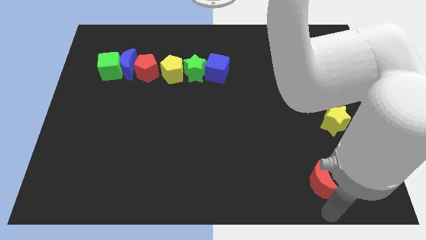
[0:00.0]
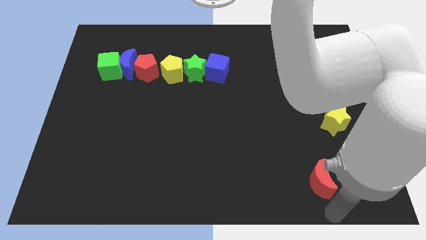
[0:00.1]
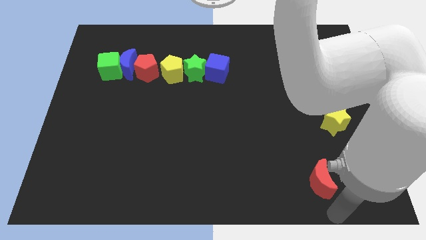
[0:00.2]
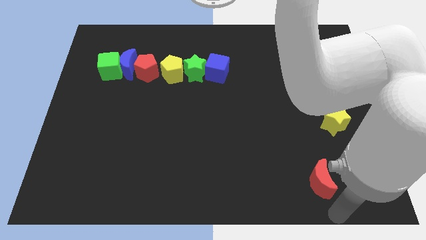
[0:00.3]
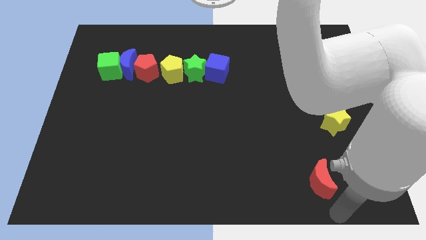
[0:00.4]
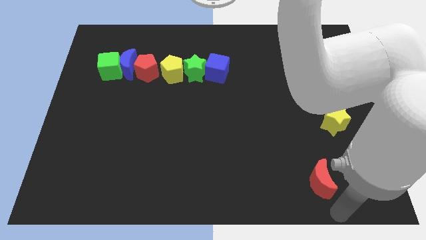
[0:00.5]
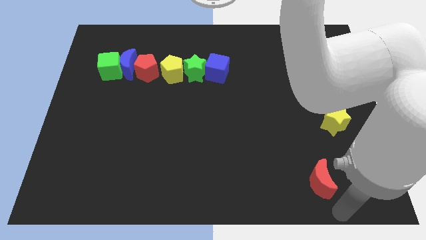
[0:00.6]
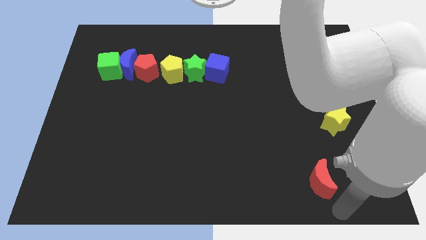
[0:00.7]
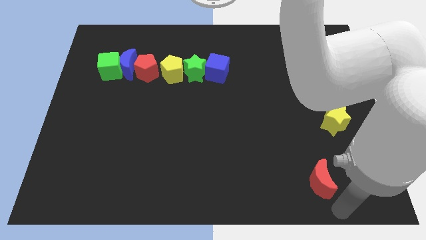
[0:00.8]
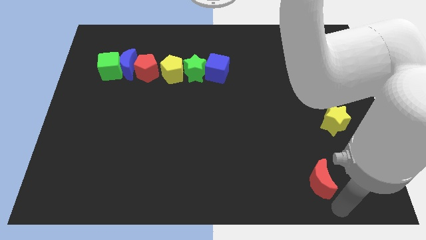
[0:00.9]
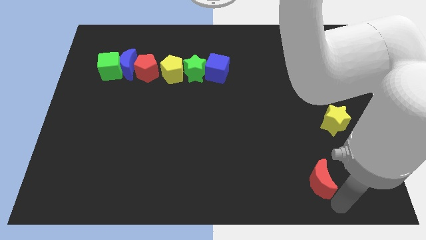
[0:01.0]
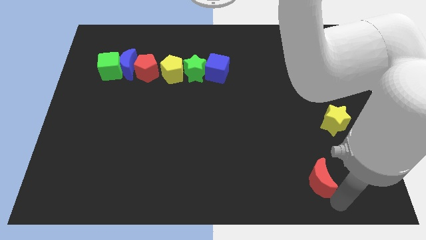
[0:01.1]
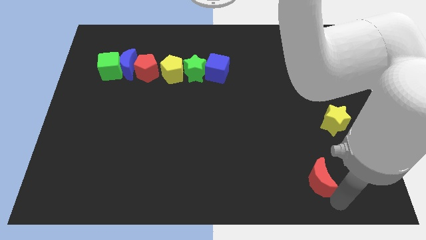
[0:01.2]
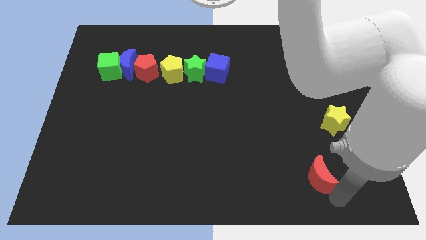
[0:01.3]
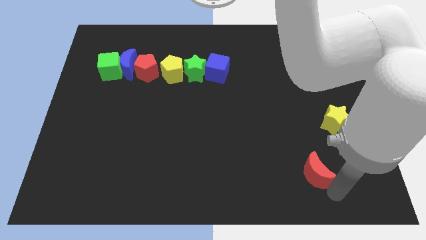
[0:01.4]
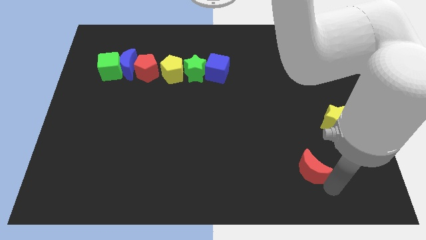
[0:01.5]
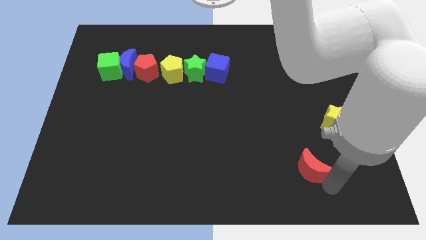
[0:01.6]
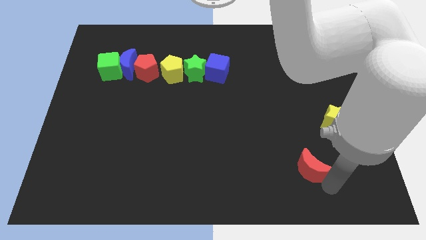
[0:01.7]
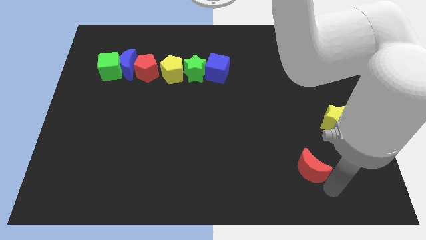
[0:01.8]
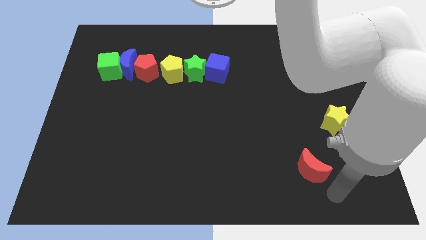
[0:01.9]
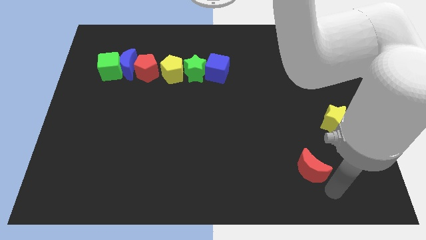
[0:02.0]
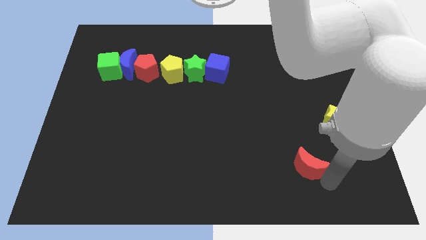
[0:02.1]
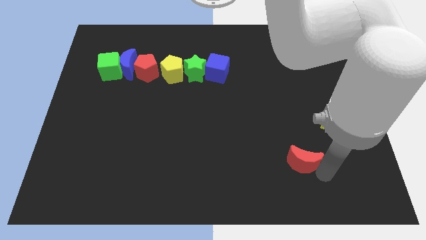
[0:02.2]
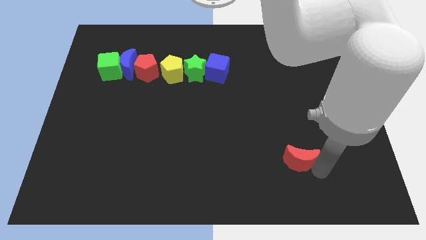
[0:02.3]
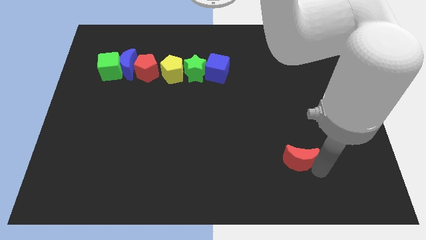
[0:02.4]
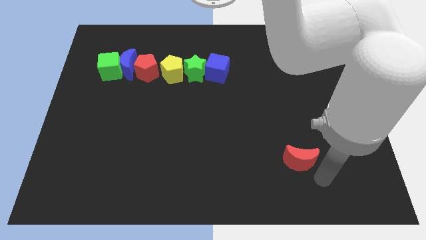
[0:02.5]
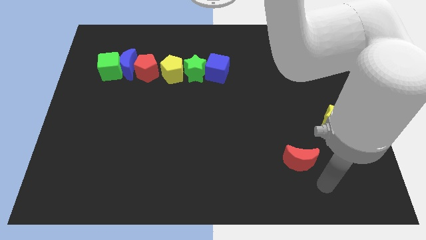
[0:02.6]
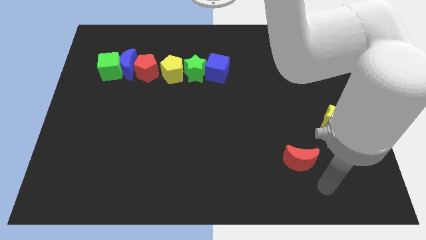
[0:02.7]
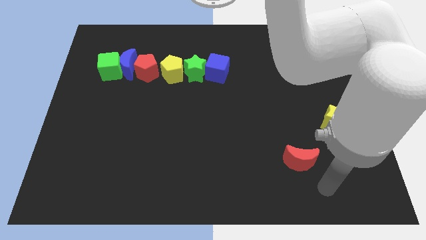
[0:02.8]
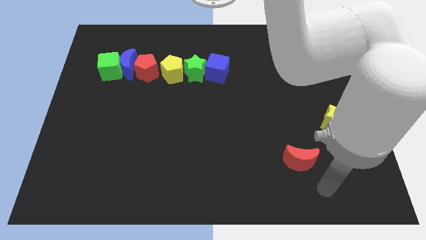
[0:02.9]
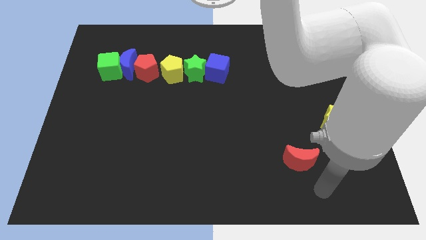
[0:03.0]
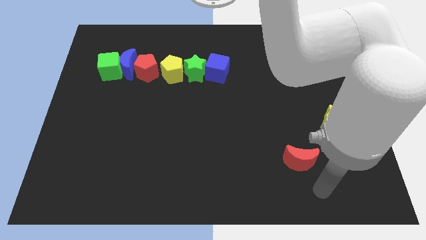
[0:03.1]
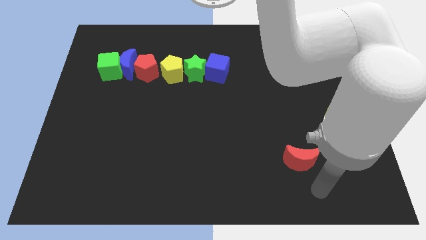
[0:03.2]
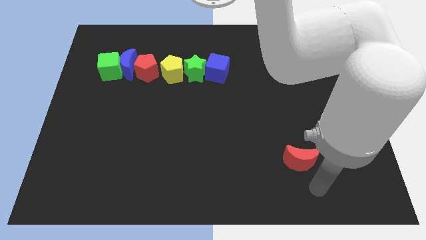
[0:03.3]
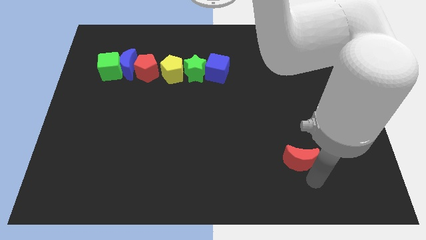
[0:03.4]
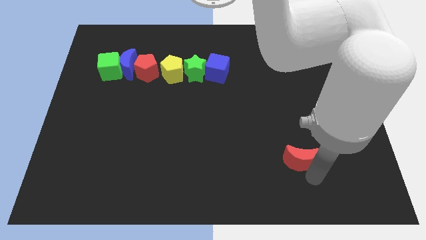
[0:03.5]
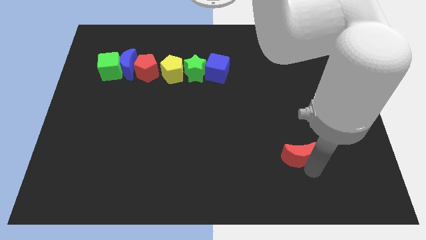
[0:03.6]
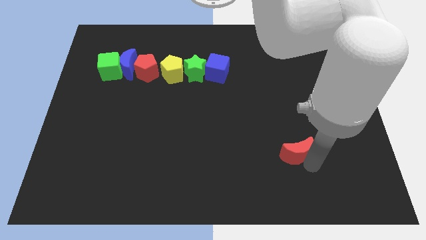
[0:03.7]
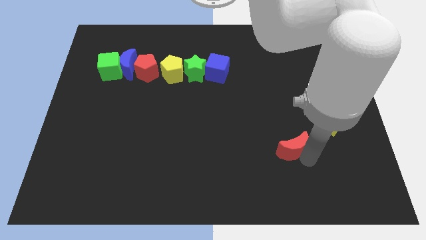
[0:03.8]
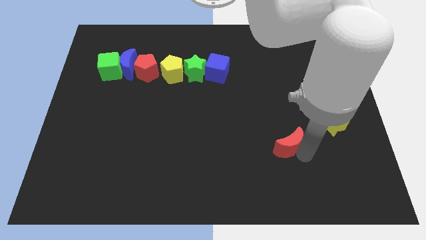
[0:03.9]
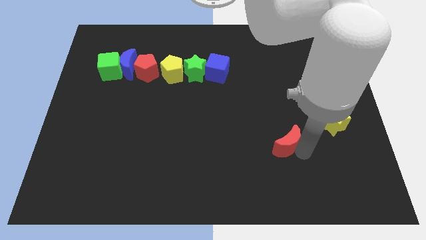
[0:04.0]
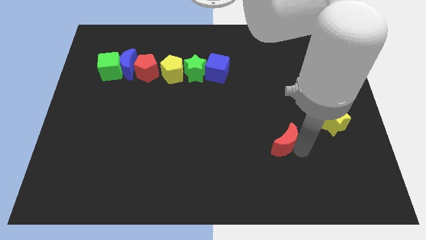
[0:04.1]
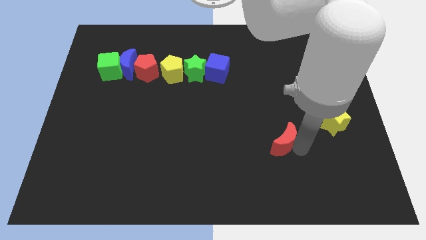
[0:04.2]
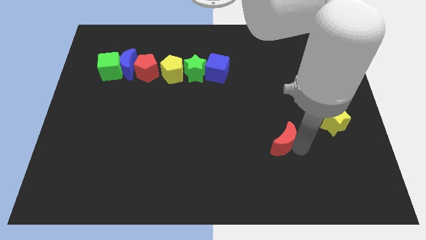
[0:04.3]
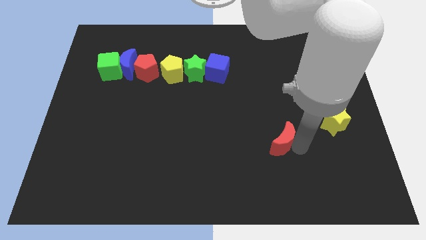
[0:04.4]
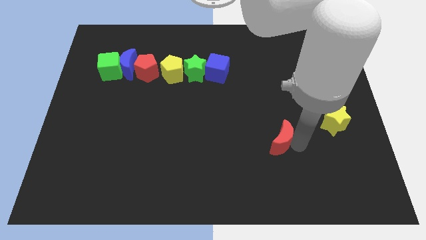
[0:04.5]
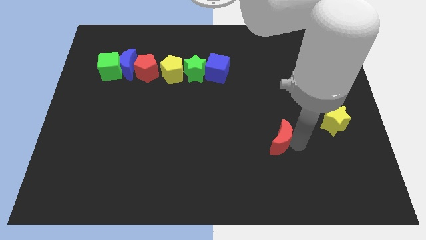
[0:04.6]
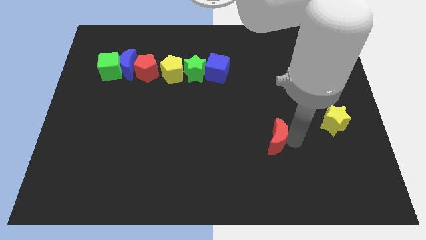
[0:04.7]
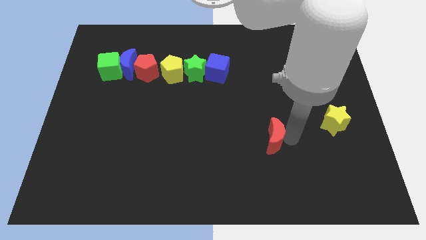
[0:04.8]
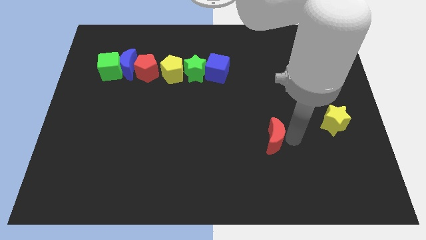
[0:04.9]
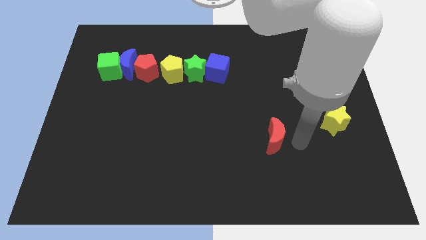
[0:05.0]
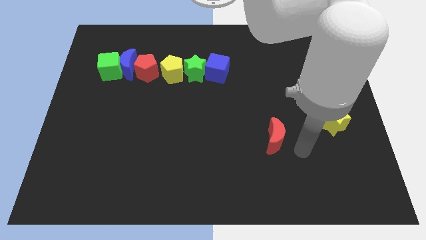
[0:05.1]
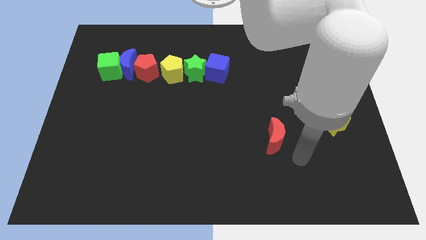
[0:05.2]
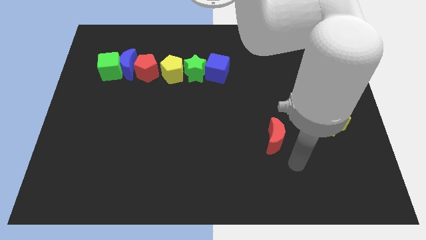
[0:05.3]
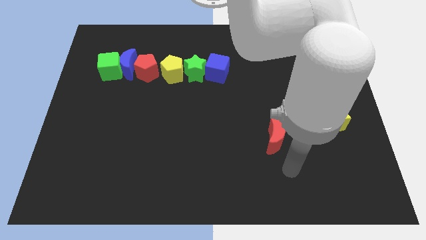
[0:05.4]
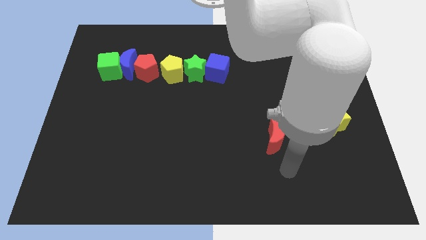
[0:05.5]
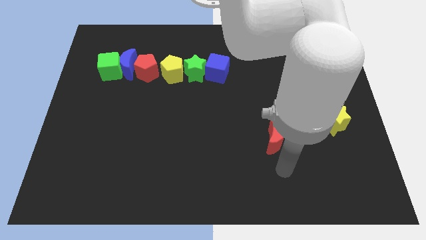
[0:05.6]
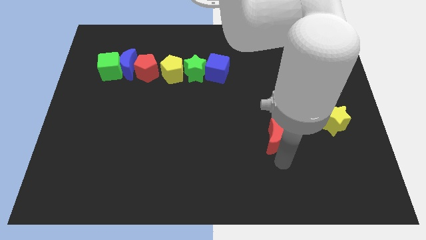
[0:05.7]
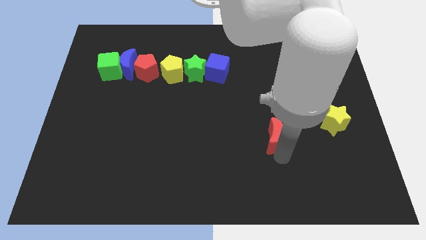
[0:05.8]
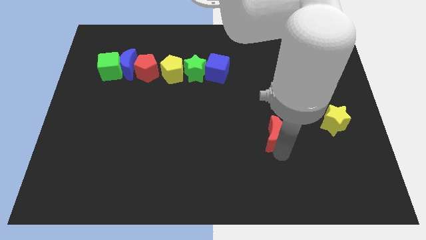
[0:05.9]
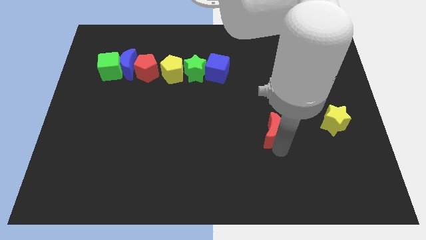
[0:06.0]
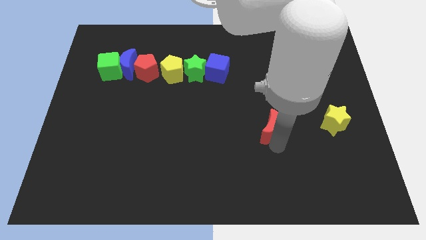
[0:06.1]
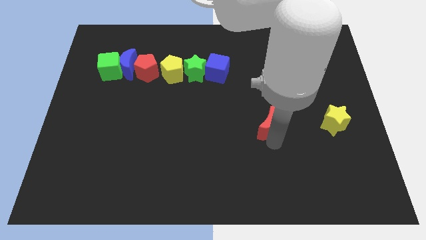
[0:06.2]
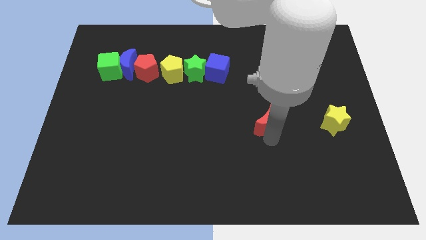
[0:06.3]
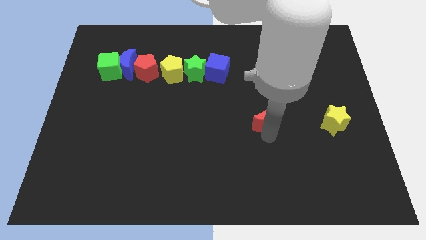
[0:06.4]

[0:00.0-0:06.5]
move the red crescent to the left of the yellow star

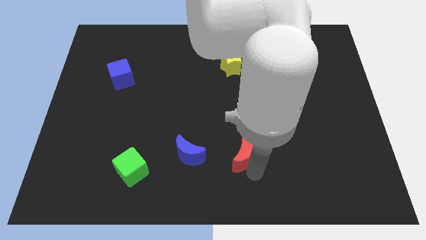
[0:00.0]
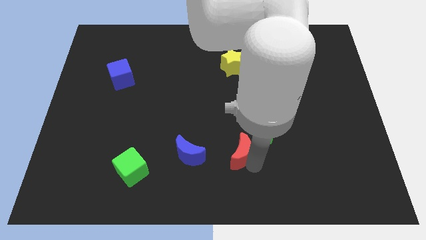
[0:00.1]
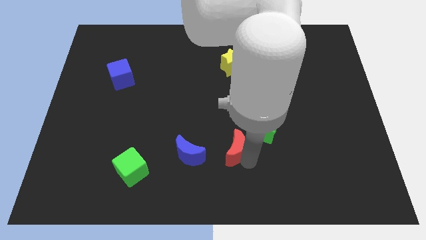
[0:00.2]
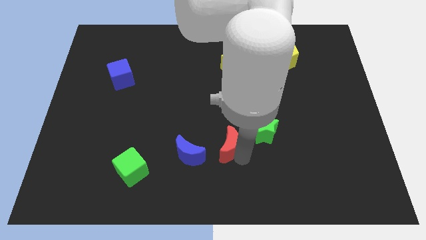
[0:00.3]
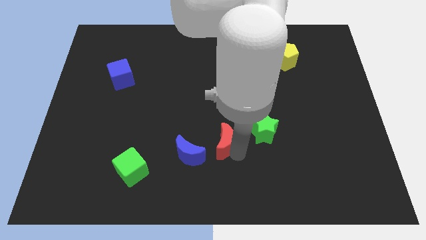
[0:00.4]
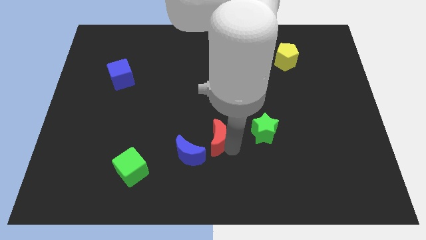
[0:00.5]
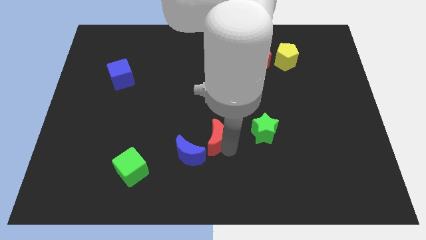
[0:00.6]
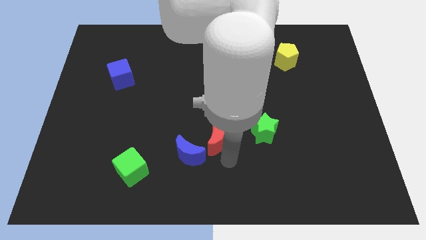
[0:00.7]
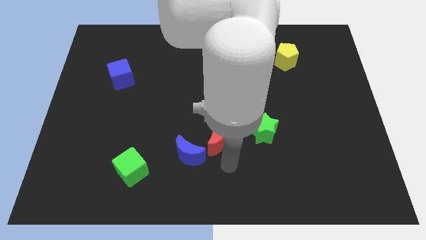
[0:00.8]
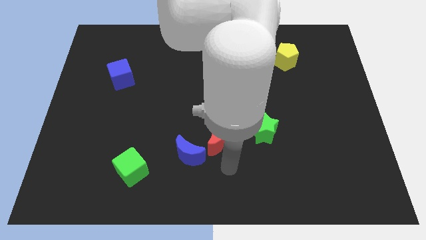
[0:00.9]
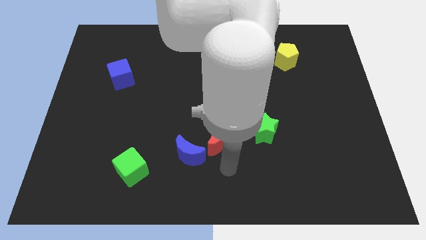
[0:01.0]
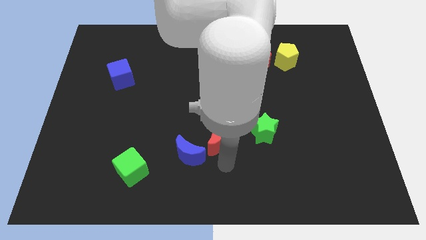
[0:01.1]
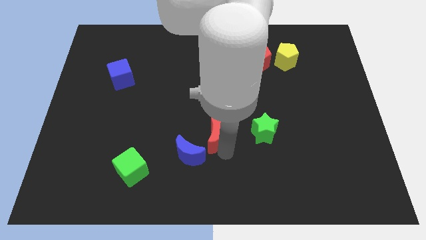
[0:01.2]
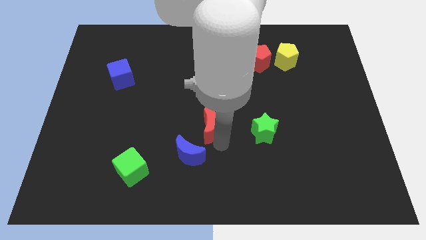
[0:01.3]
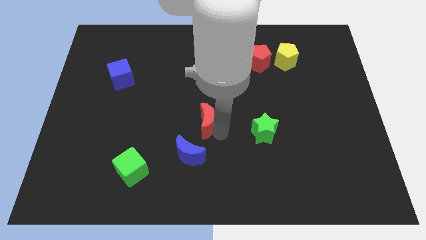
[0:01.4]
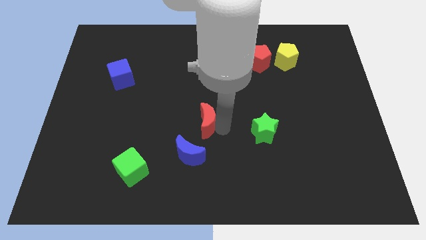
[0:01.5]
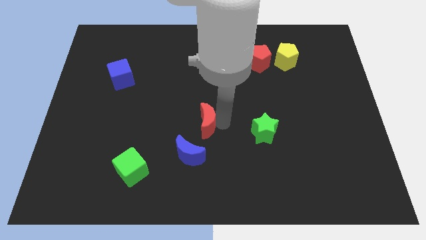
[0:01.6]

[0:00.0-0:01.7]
place red crescent above blue crescent

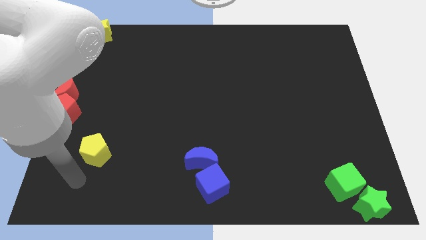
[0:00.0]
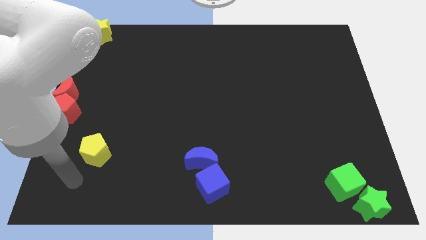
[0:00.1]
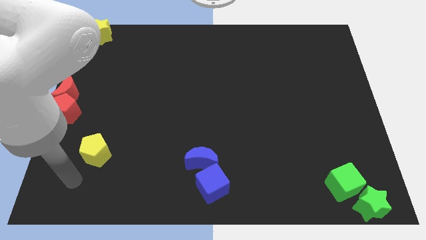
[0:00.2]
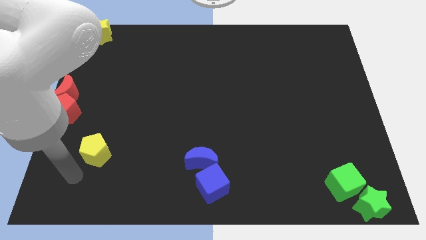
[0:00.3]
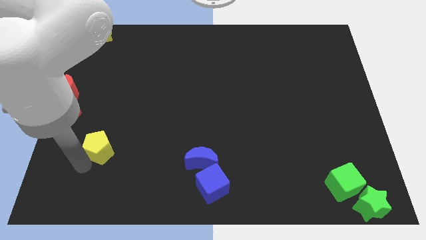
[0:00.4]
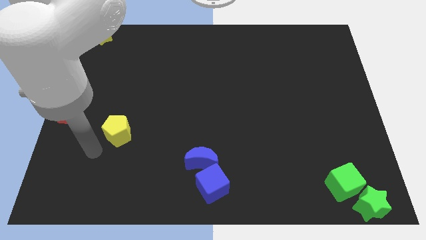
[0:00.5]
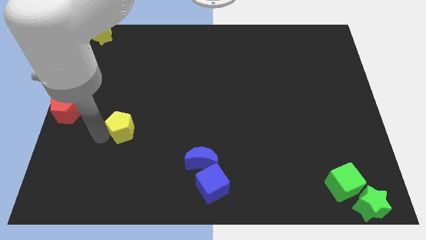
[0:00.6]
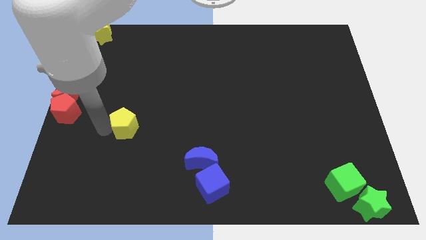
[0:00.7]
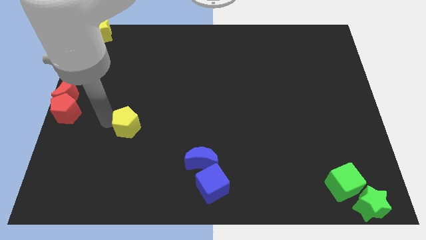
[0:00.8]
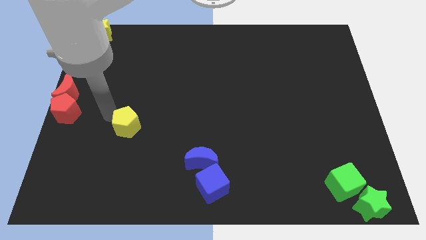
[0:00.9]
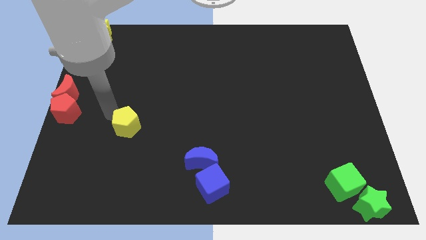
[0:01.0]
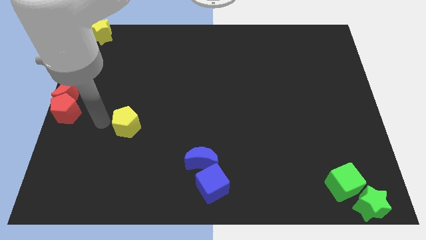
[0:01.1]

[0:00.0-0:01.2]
move the yellow pentagon right to the red pentagon
